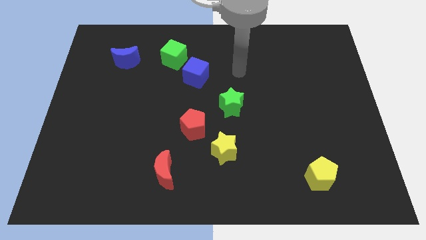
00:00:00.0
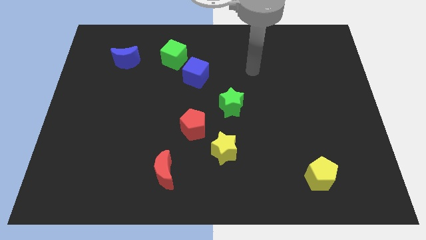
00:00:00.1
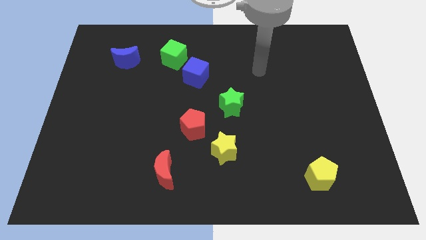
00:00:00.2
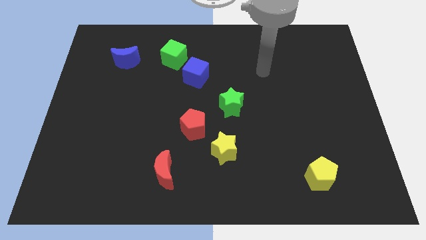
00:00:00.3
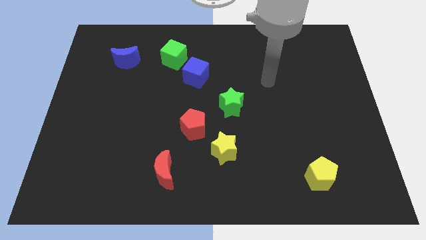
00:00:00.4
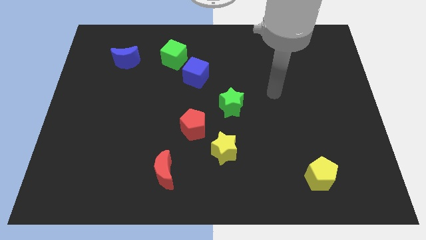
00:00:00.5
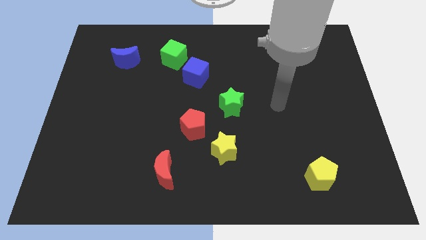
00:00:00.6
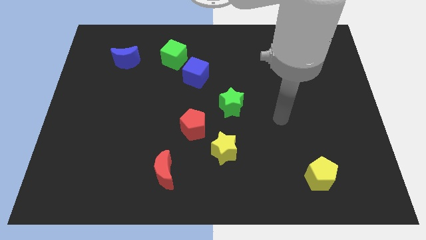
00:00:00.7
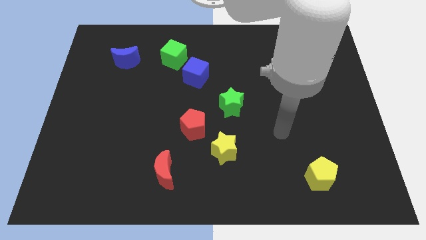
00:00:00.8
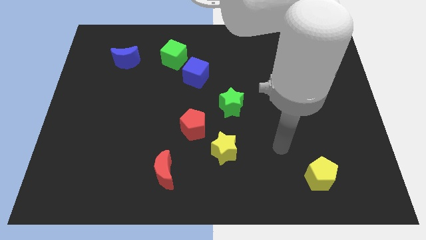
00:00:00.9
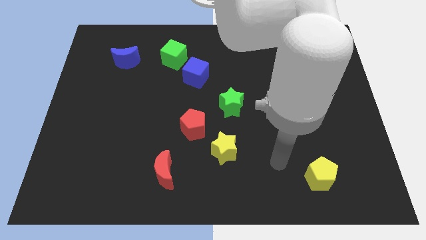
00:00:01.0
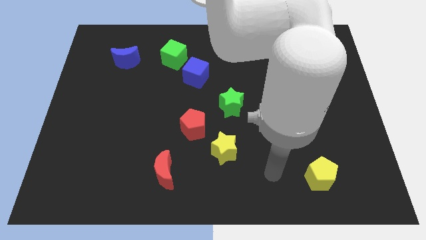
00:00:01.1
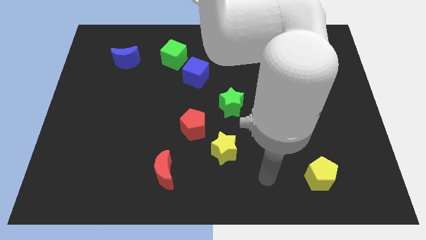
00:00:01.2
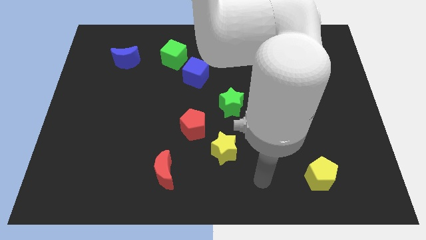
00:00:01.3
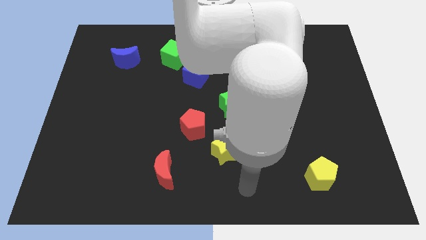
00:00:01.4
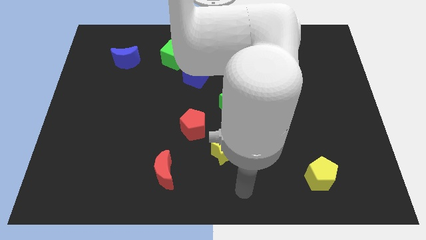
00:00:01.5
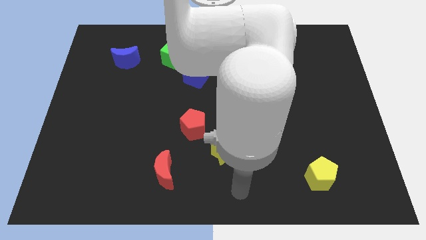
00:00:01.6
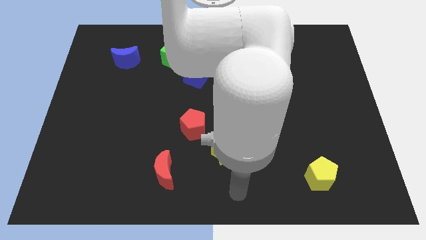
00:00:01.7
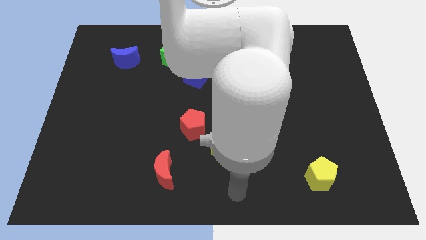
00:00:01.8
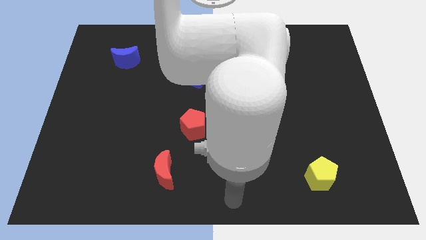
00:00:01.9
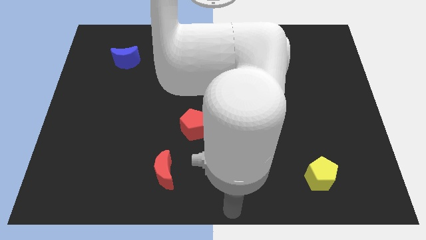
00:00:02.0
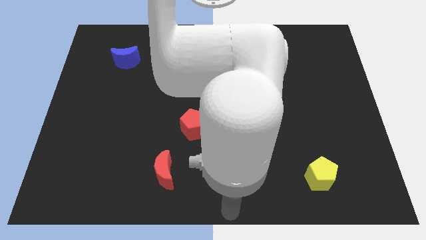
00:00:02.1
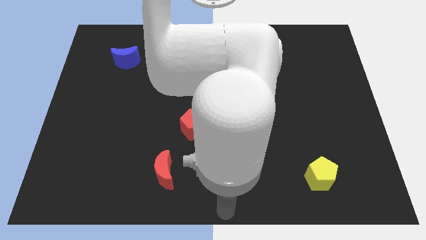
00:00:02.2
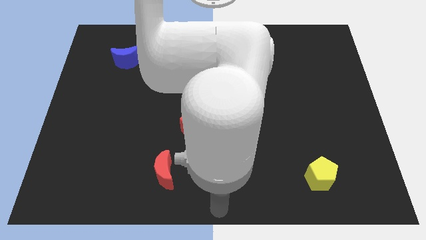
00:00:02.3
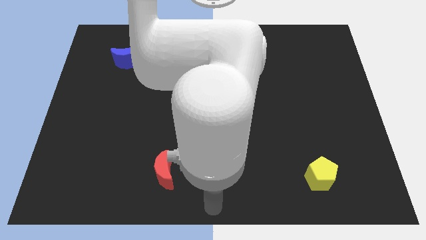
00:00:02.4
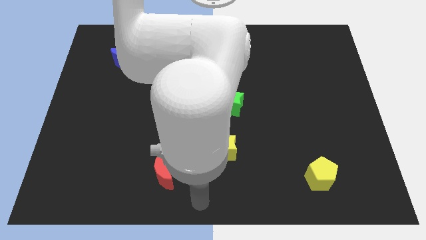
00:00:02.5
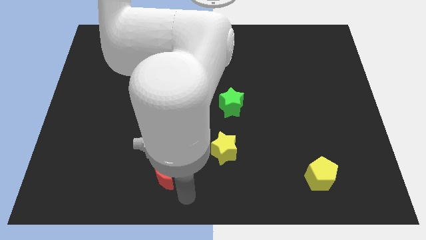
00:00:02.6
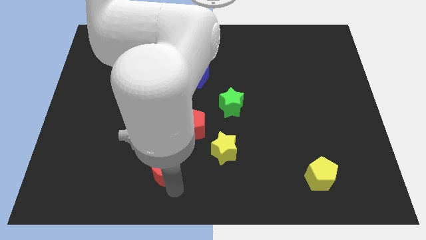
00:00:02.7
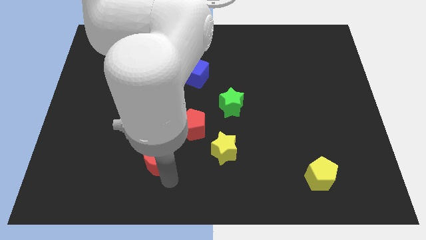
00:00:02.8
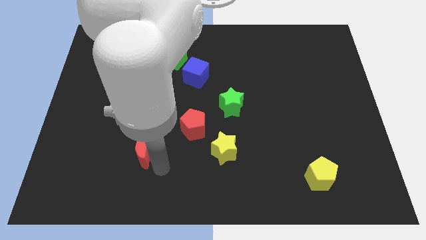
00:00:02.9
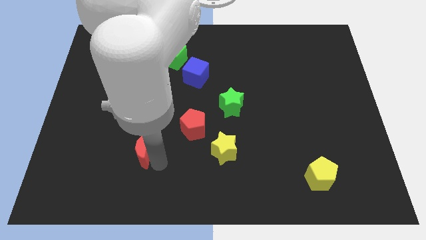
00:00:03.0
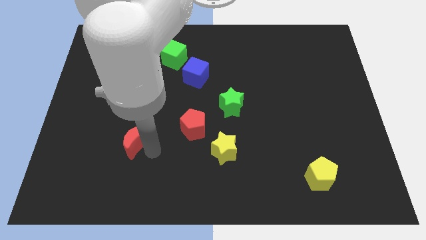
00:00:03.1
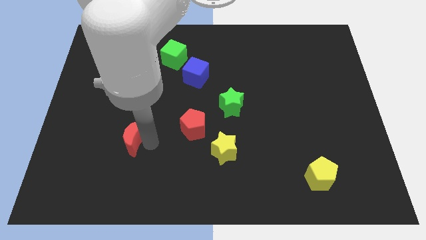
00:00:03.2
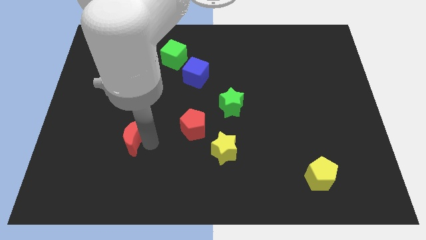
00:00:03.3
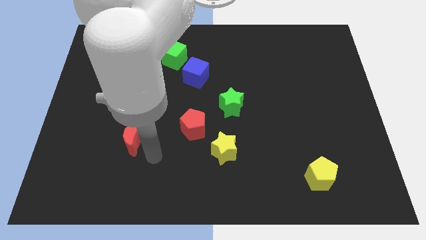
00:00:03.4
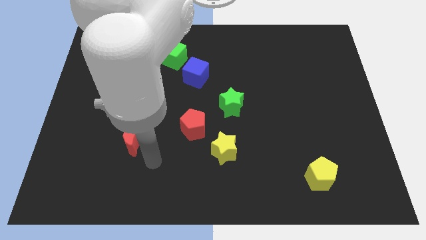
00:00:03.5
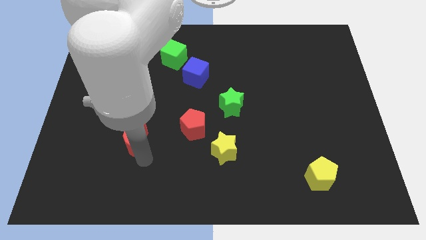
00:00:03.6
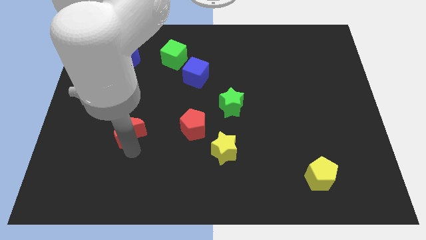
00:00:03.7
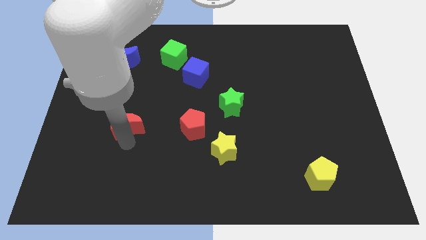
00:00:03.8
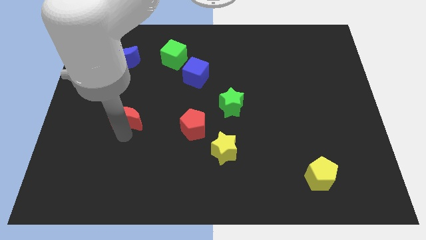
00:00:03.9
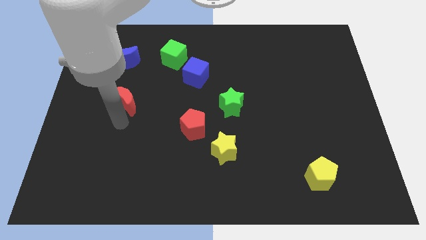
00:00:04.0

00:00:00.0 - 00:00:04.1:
move the red crescent to the top of the board

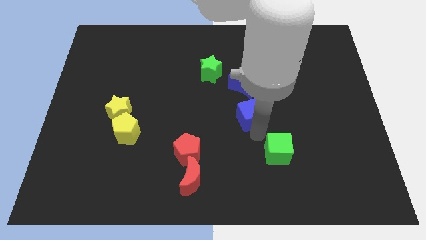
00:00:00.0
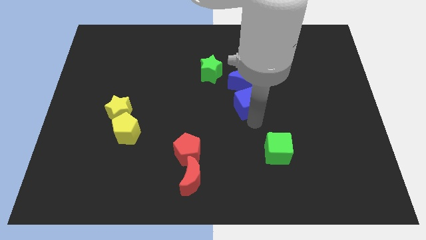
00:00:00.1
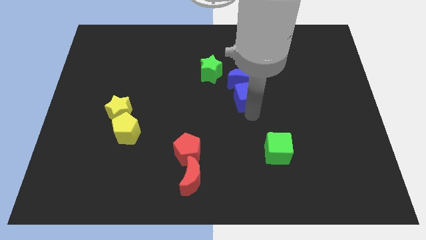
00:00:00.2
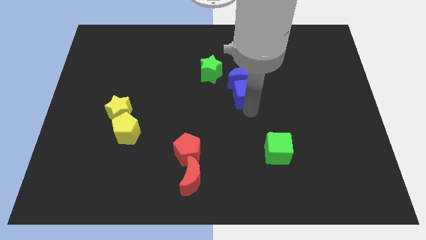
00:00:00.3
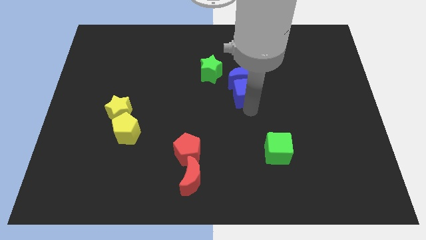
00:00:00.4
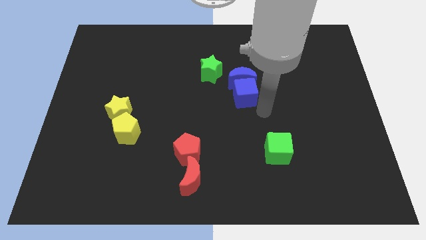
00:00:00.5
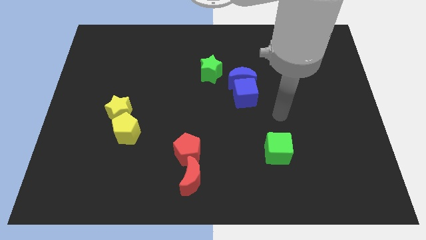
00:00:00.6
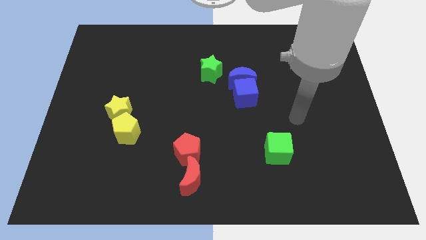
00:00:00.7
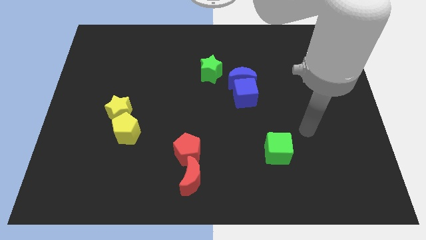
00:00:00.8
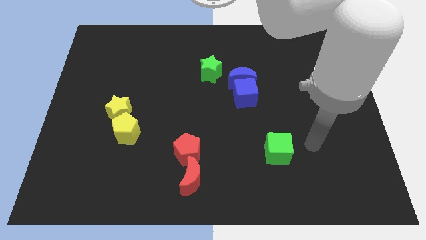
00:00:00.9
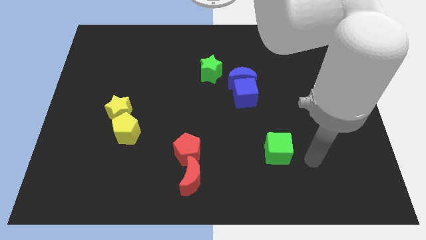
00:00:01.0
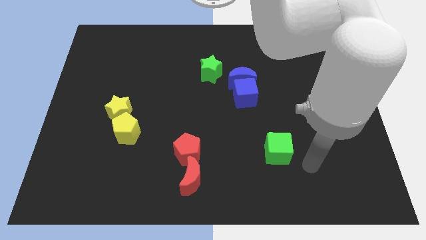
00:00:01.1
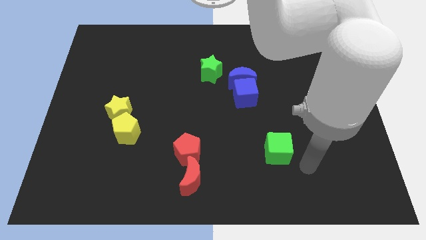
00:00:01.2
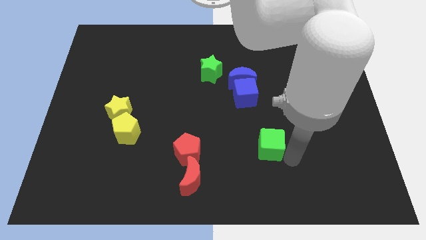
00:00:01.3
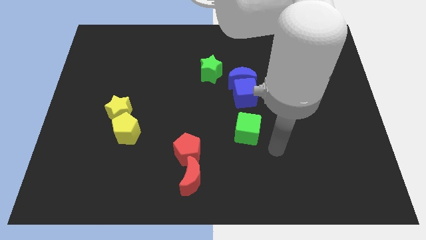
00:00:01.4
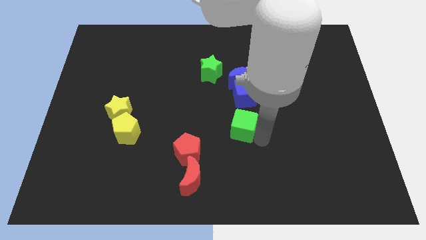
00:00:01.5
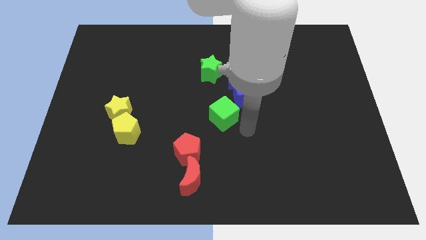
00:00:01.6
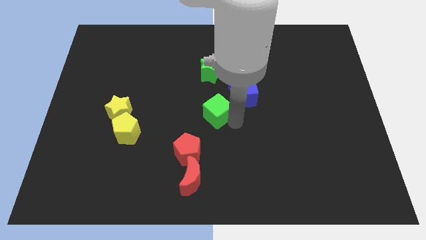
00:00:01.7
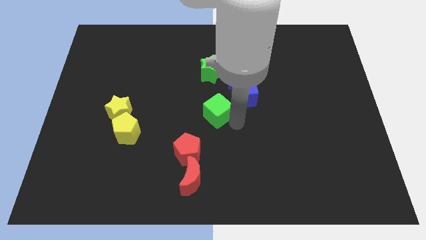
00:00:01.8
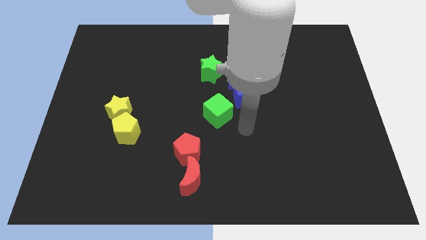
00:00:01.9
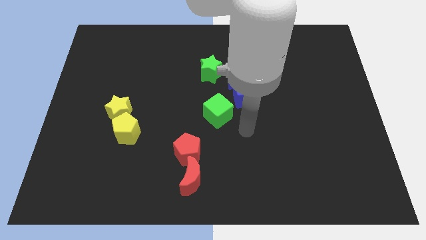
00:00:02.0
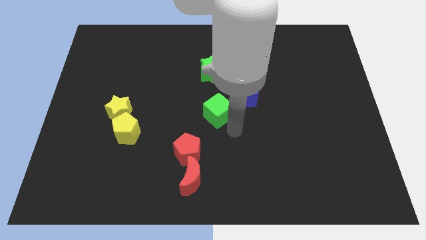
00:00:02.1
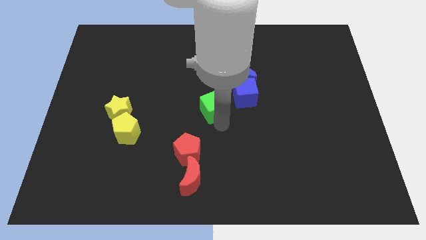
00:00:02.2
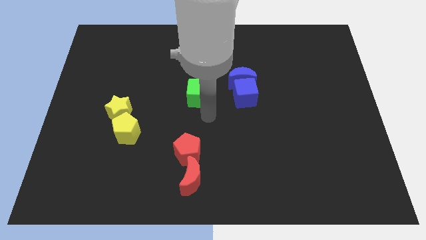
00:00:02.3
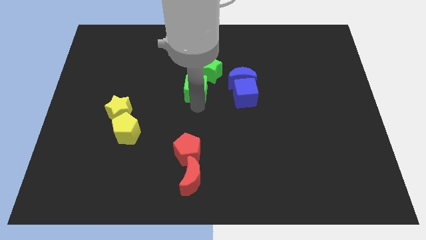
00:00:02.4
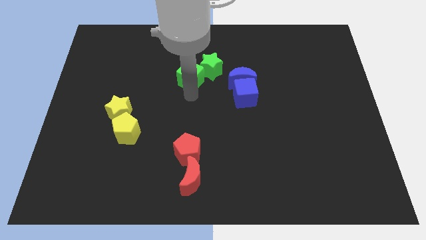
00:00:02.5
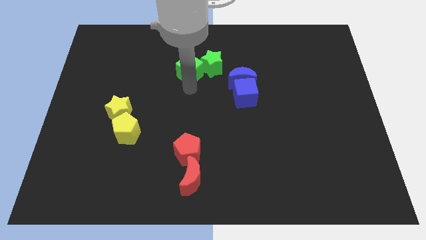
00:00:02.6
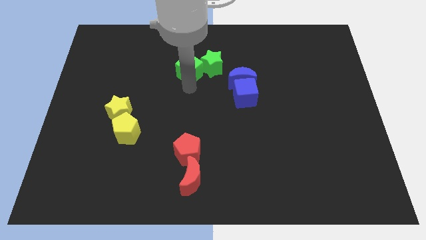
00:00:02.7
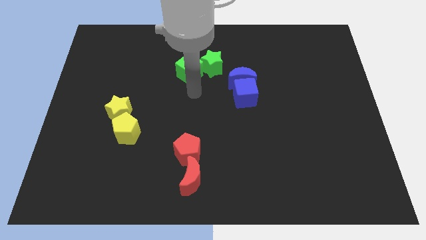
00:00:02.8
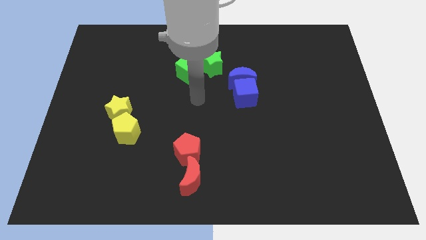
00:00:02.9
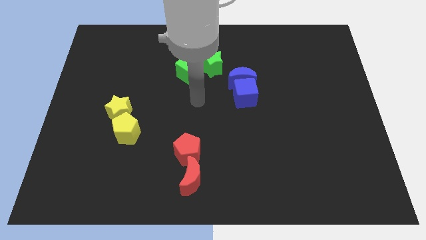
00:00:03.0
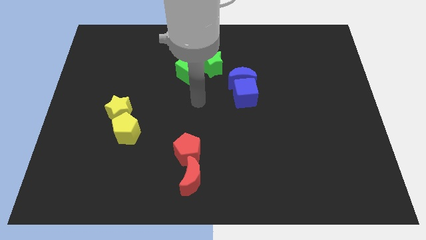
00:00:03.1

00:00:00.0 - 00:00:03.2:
attach the green cube to the green star

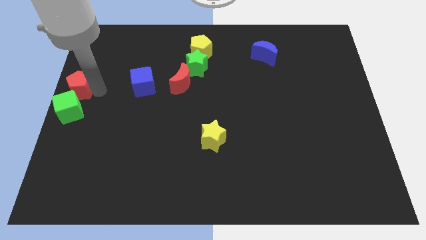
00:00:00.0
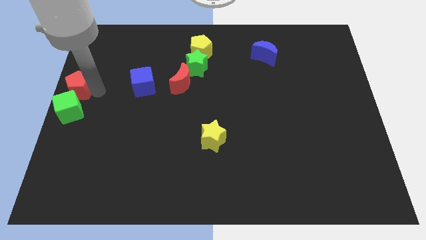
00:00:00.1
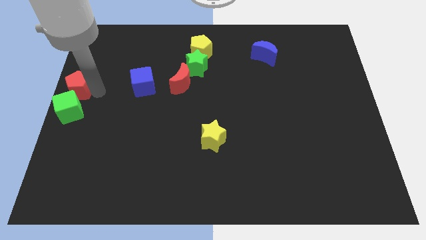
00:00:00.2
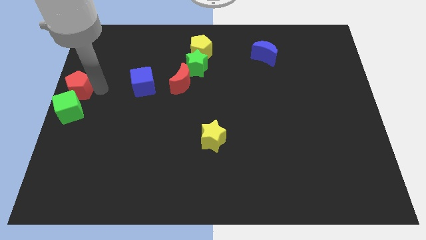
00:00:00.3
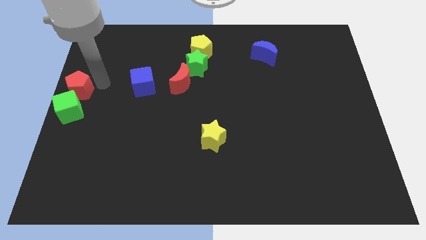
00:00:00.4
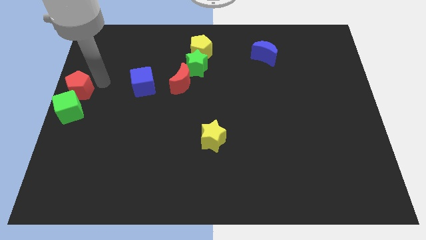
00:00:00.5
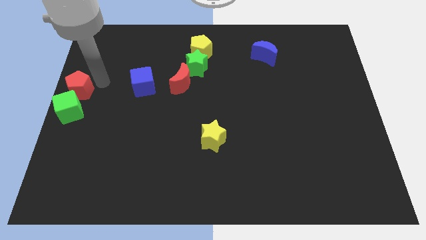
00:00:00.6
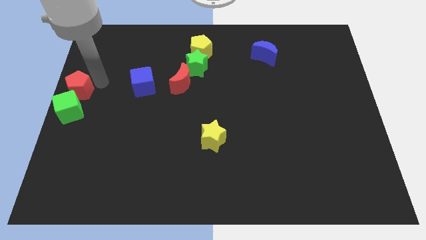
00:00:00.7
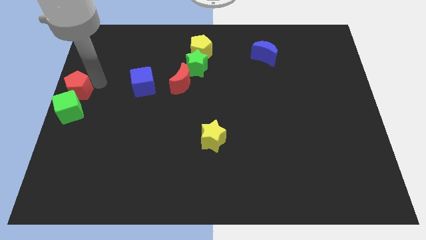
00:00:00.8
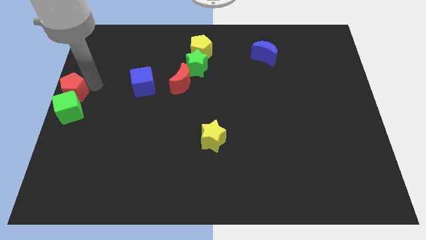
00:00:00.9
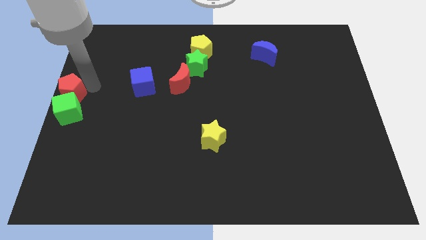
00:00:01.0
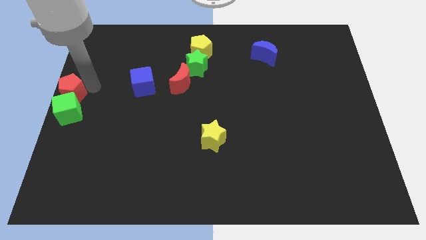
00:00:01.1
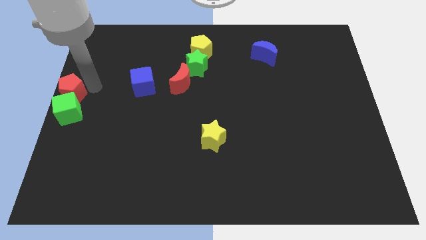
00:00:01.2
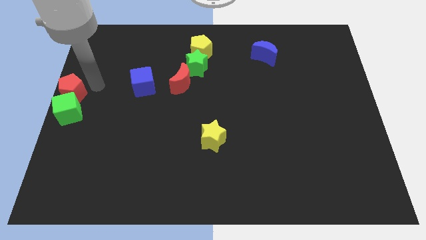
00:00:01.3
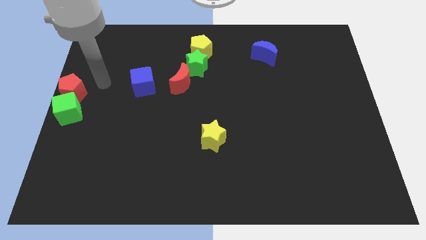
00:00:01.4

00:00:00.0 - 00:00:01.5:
push the red pentagon into the green cube

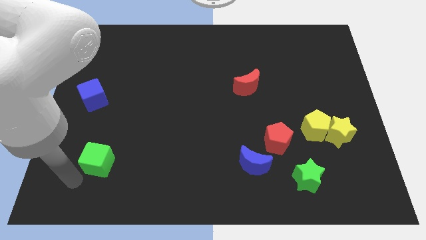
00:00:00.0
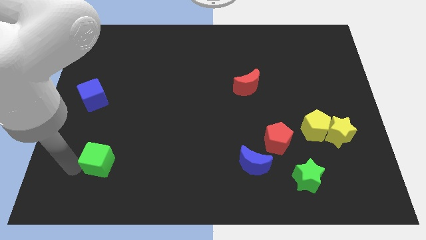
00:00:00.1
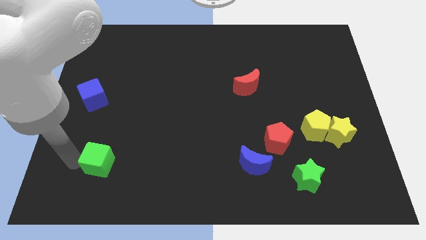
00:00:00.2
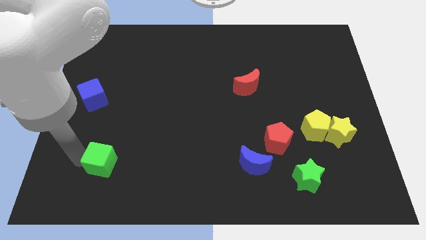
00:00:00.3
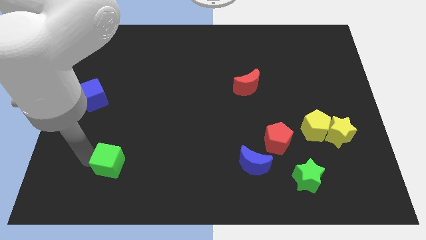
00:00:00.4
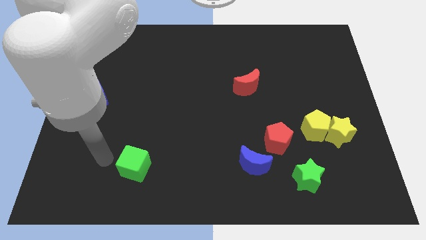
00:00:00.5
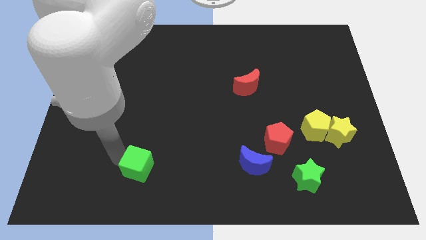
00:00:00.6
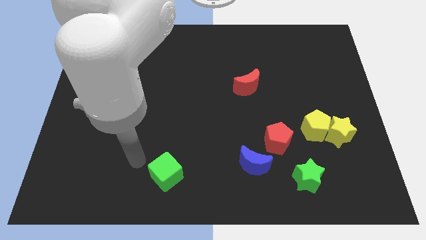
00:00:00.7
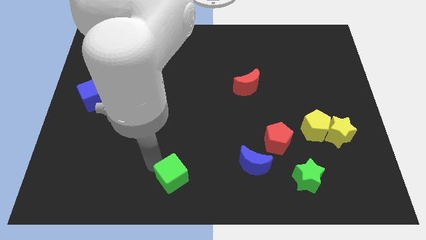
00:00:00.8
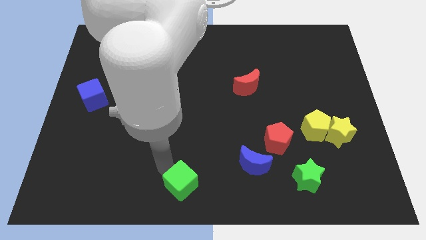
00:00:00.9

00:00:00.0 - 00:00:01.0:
push the green cube to the bottom left side of the blue moon
